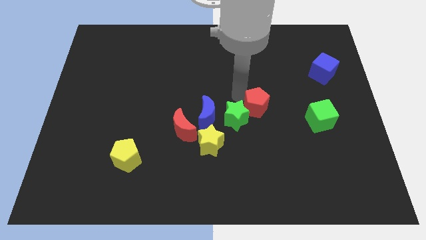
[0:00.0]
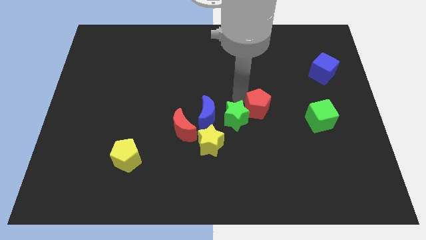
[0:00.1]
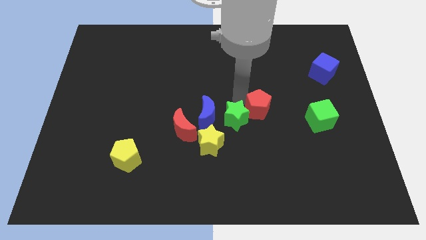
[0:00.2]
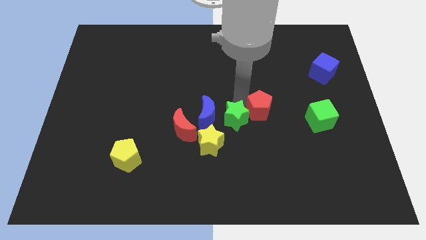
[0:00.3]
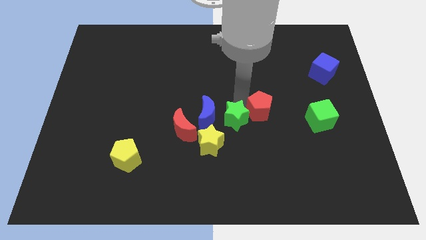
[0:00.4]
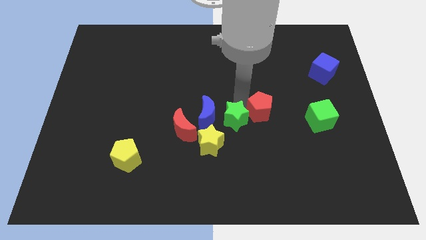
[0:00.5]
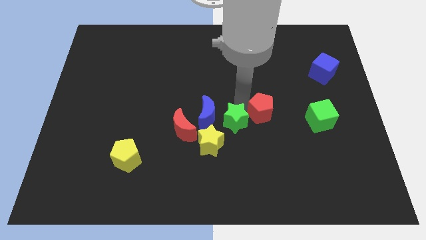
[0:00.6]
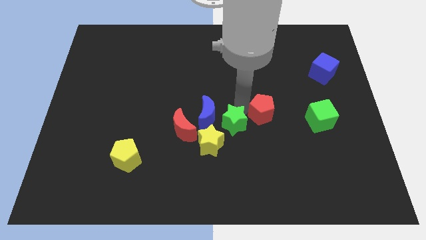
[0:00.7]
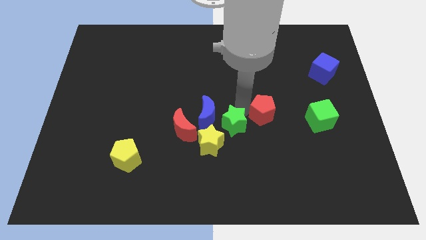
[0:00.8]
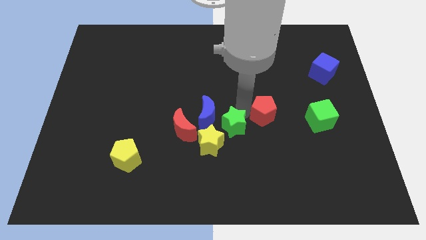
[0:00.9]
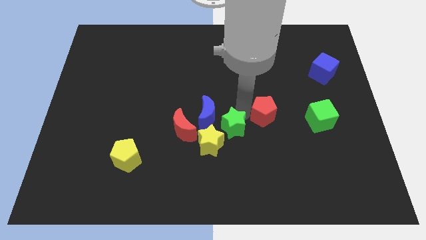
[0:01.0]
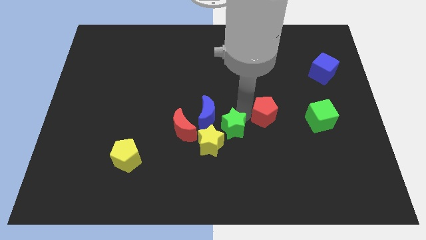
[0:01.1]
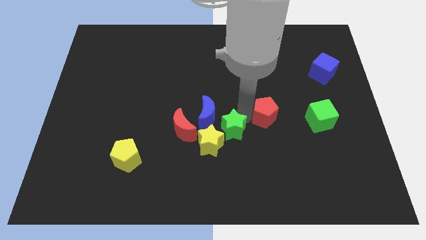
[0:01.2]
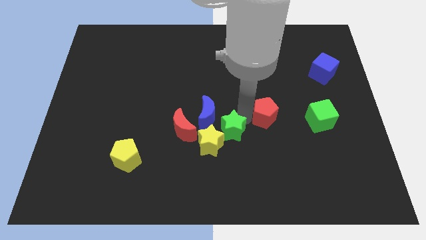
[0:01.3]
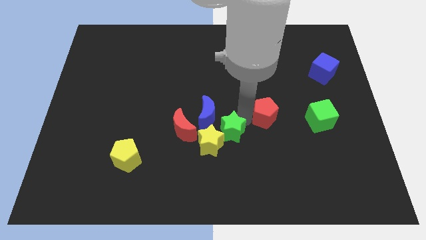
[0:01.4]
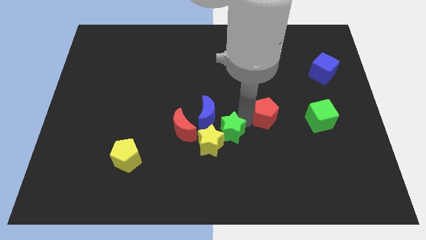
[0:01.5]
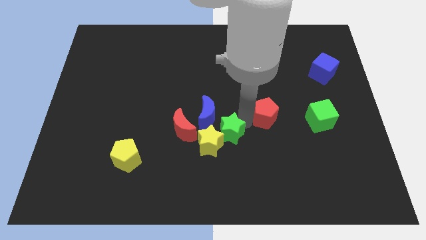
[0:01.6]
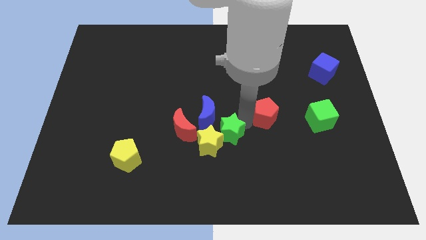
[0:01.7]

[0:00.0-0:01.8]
separate the red pentagon and green star

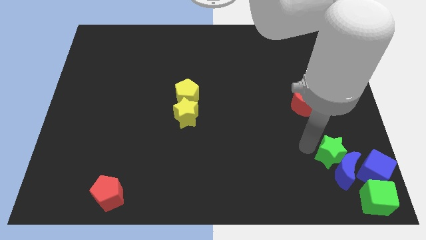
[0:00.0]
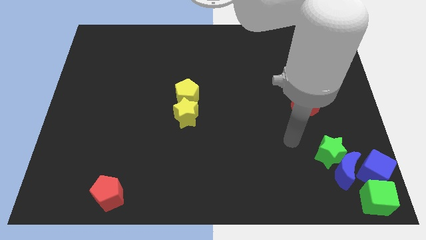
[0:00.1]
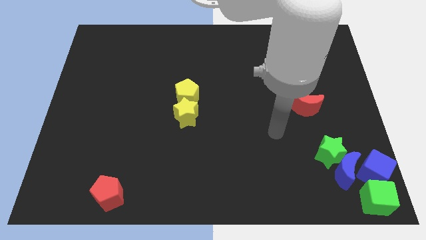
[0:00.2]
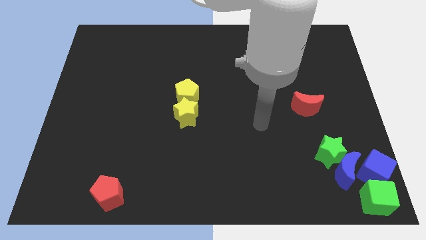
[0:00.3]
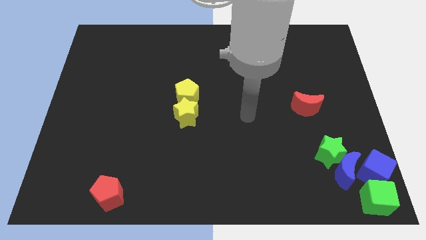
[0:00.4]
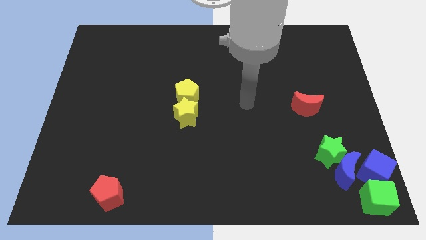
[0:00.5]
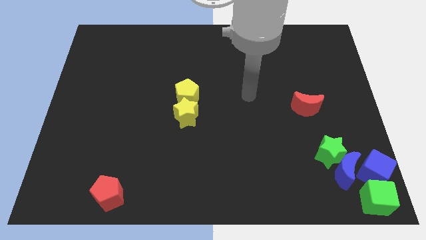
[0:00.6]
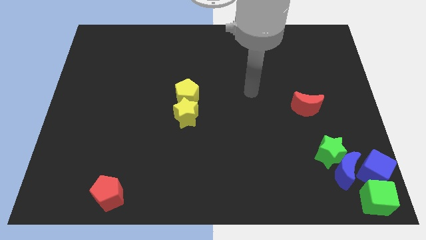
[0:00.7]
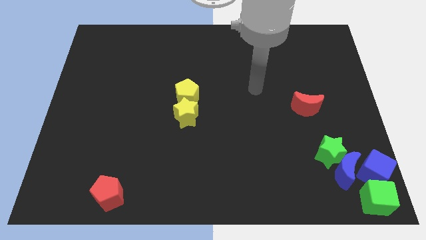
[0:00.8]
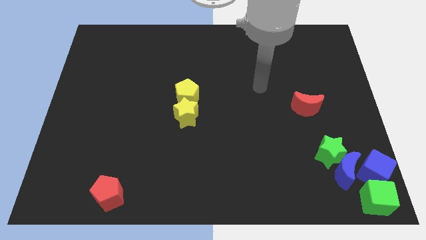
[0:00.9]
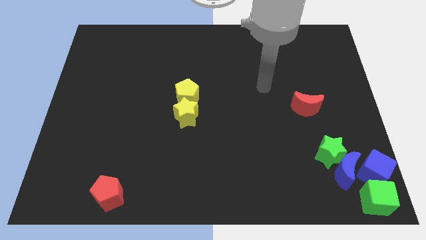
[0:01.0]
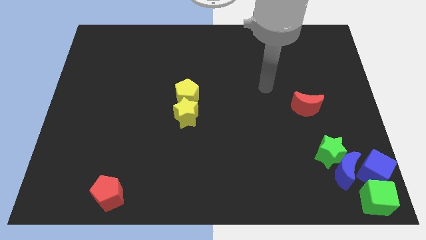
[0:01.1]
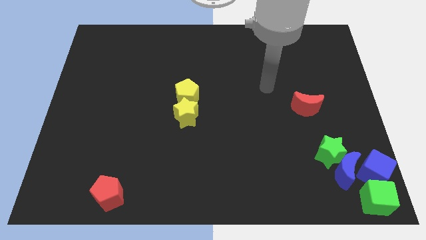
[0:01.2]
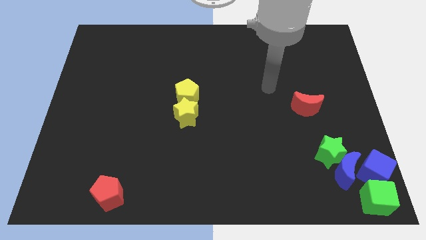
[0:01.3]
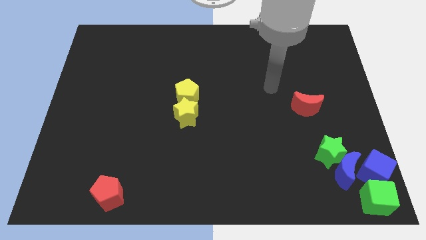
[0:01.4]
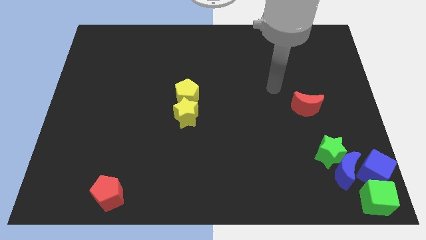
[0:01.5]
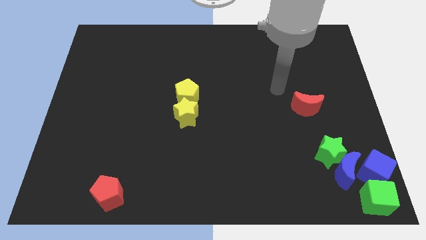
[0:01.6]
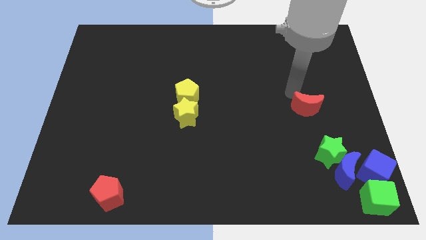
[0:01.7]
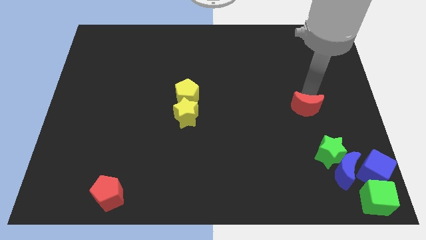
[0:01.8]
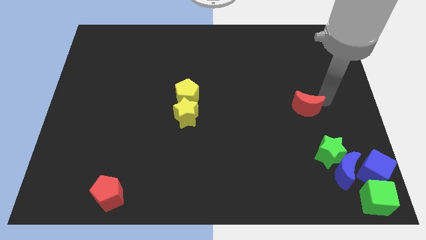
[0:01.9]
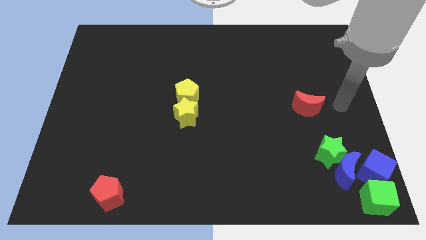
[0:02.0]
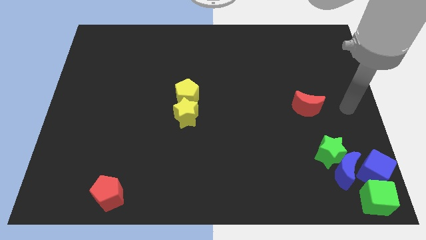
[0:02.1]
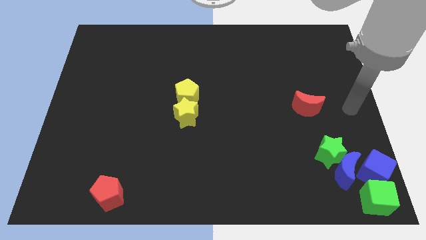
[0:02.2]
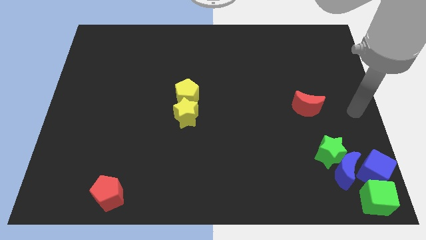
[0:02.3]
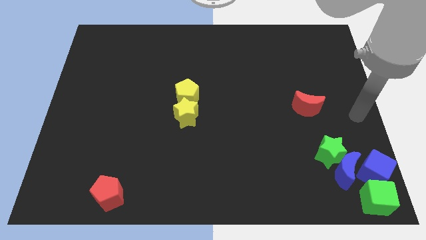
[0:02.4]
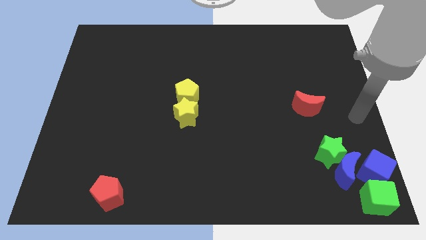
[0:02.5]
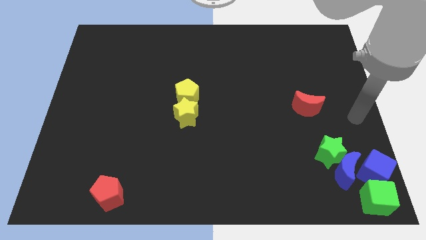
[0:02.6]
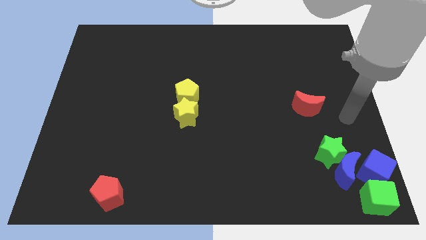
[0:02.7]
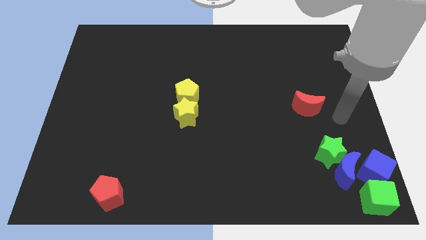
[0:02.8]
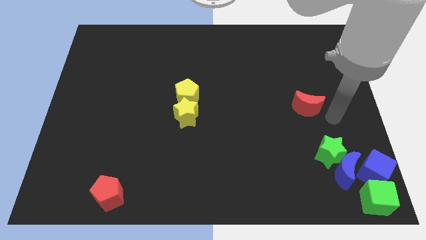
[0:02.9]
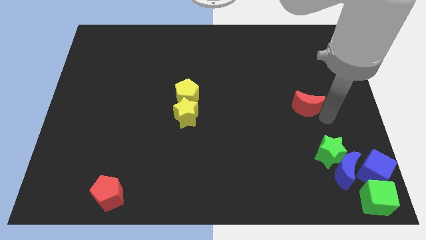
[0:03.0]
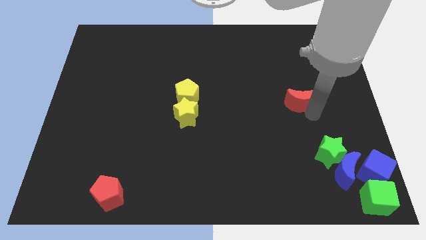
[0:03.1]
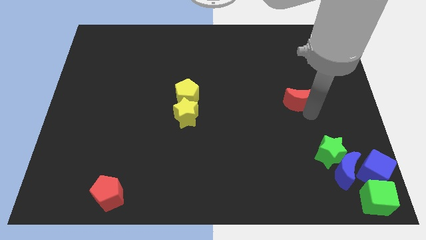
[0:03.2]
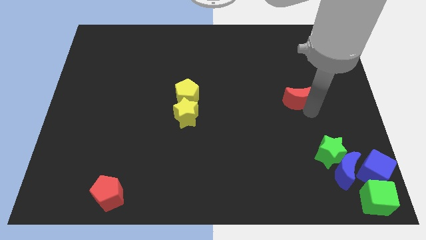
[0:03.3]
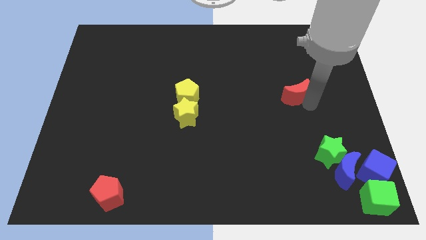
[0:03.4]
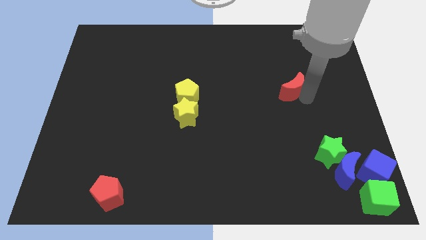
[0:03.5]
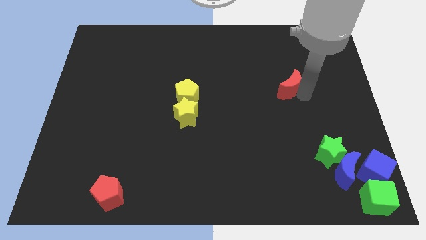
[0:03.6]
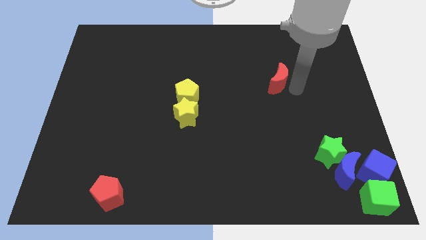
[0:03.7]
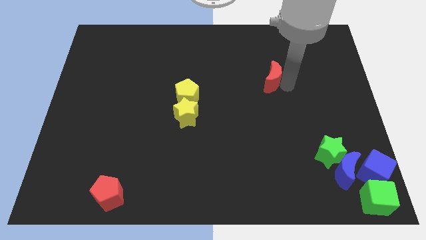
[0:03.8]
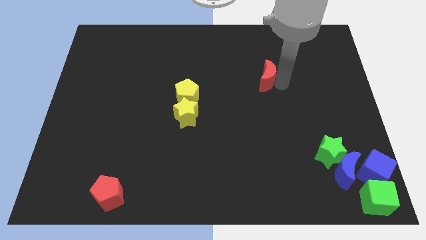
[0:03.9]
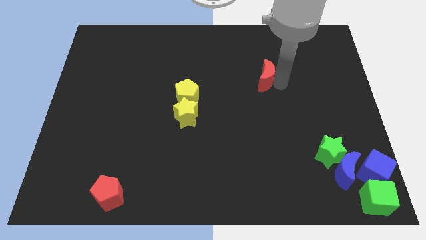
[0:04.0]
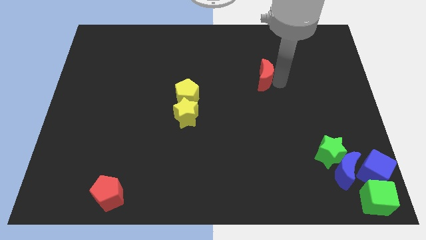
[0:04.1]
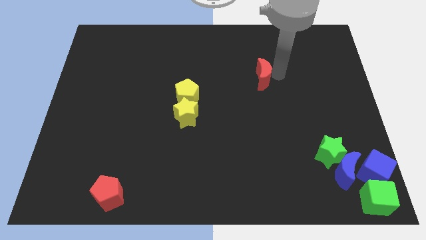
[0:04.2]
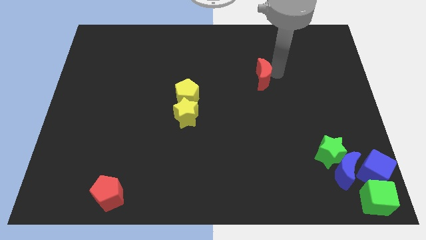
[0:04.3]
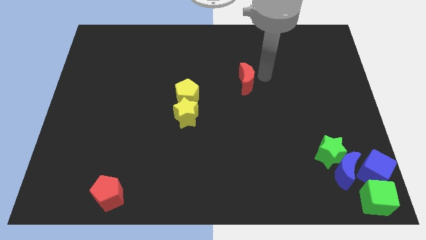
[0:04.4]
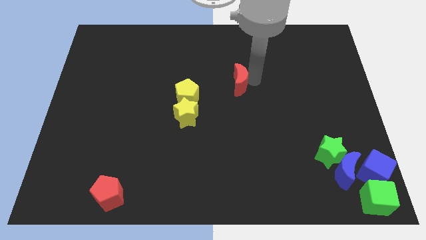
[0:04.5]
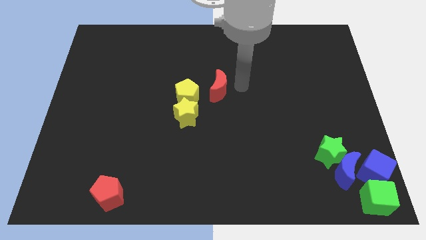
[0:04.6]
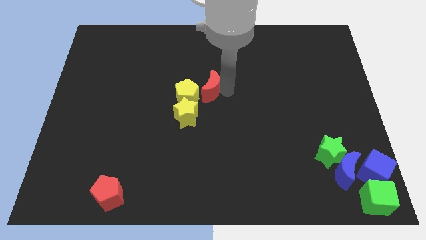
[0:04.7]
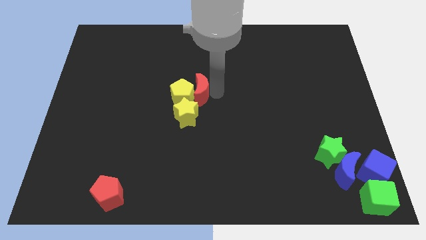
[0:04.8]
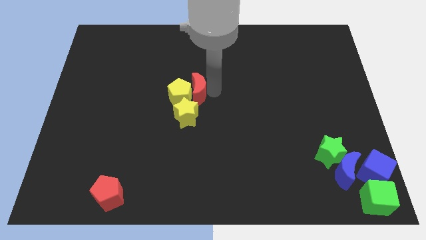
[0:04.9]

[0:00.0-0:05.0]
push the red moon into the yellow pentagon

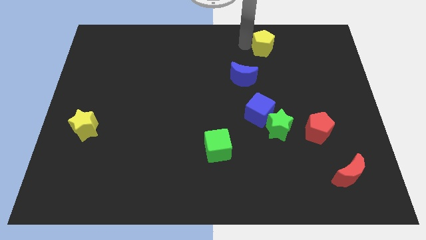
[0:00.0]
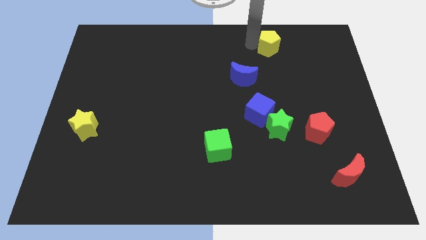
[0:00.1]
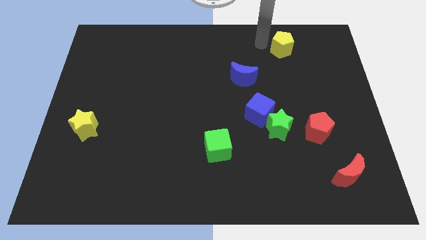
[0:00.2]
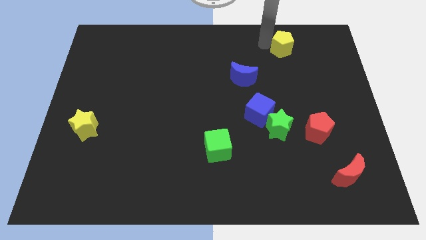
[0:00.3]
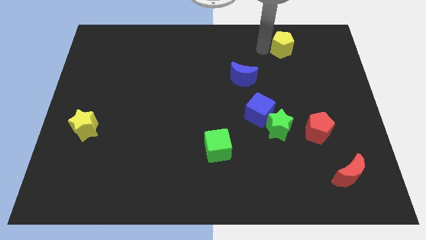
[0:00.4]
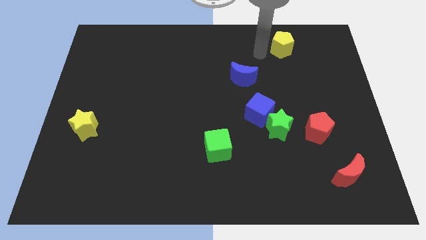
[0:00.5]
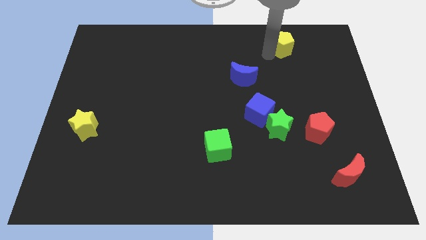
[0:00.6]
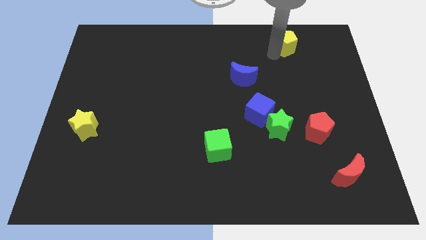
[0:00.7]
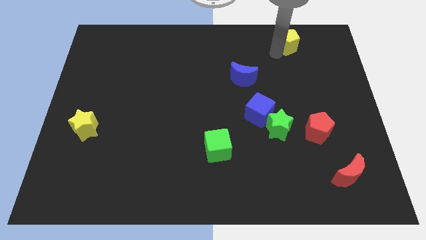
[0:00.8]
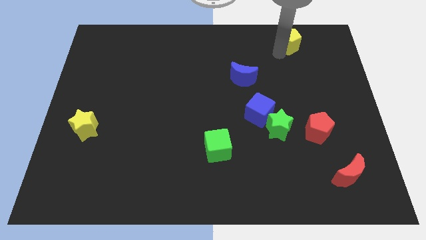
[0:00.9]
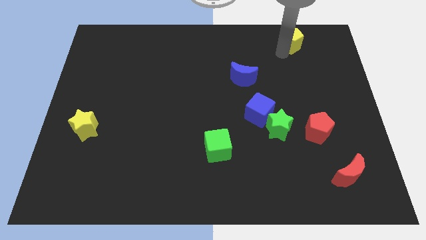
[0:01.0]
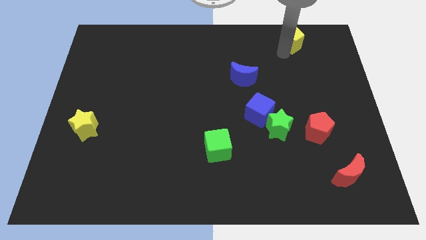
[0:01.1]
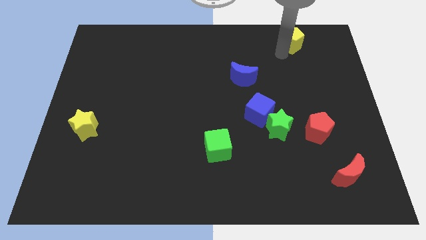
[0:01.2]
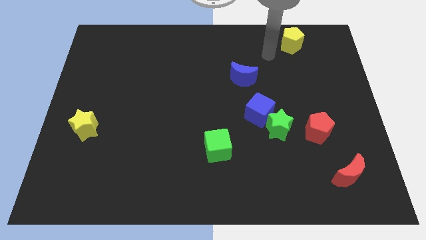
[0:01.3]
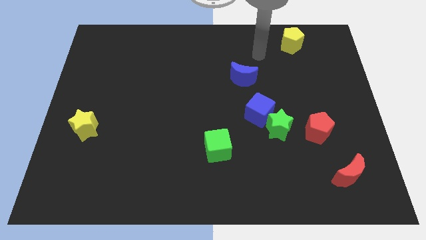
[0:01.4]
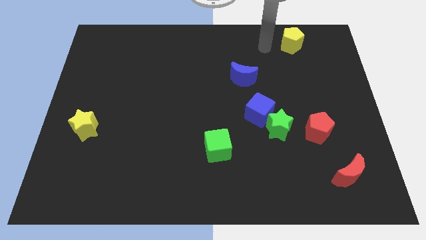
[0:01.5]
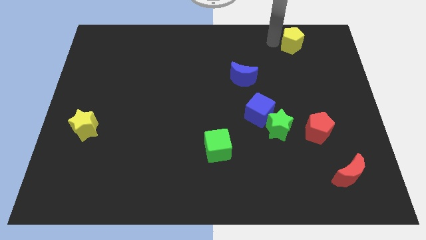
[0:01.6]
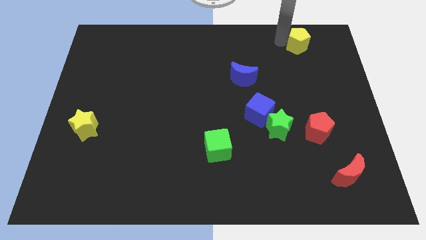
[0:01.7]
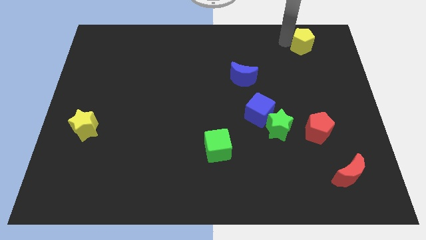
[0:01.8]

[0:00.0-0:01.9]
slide the yellow pentagon diagonally top right to the green star
